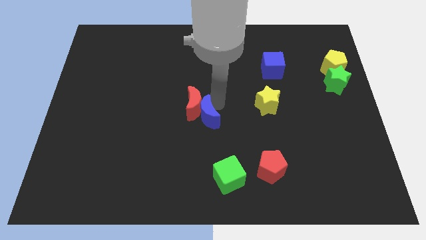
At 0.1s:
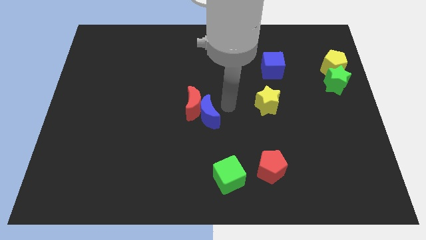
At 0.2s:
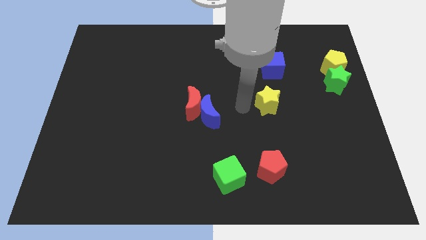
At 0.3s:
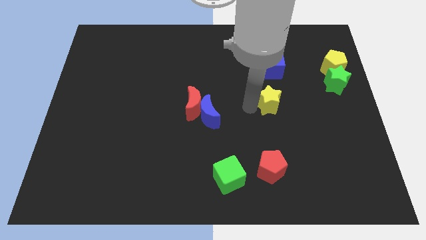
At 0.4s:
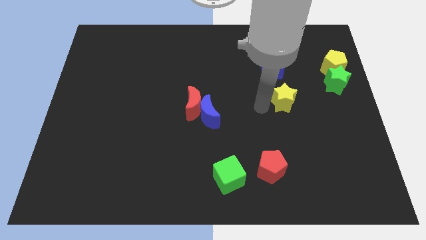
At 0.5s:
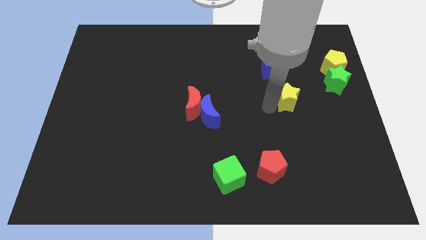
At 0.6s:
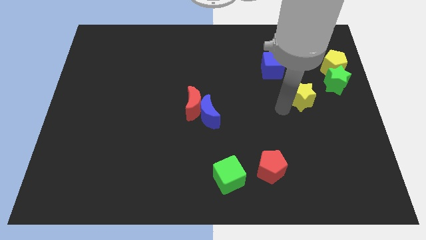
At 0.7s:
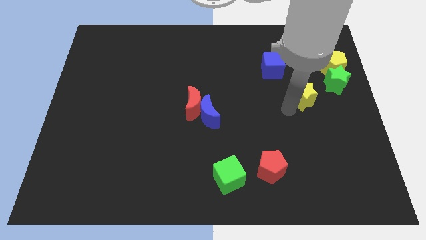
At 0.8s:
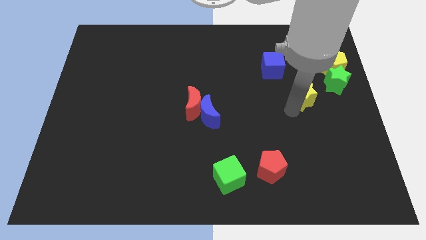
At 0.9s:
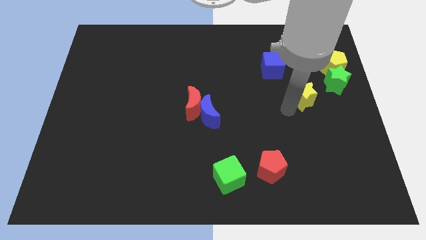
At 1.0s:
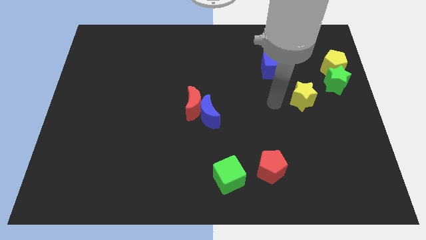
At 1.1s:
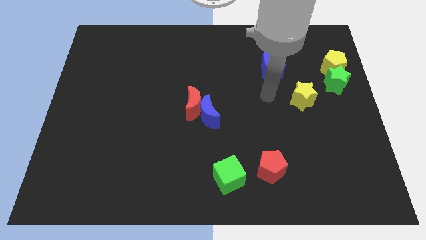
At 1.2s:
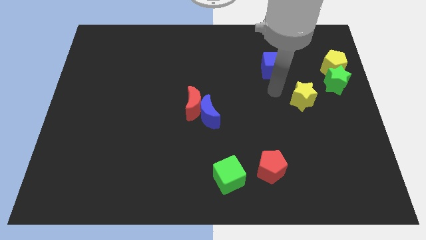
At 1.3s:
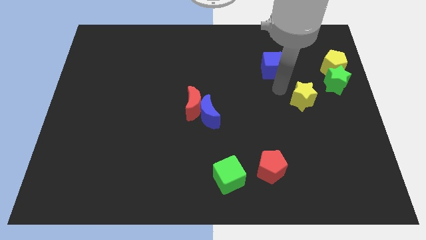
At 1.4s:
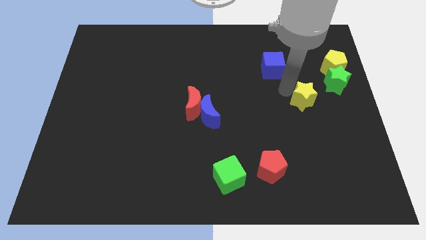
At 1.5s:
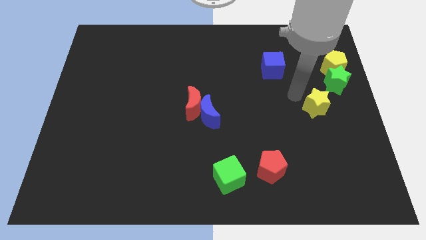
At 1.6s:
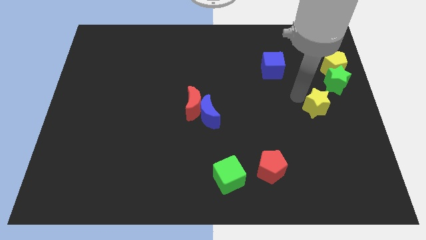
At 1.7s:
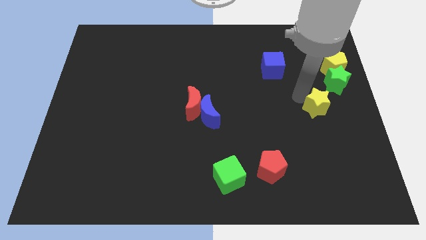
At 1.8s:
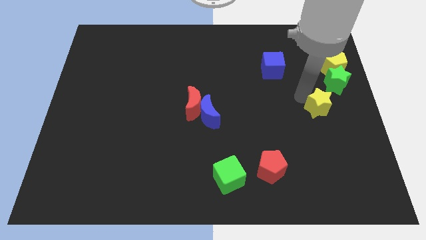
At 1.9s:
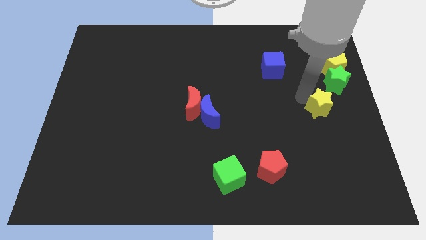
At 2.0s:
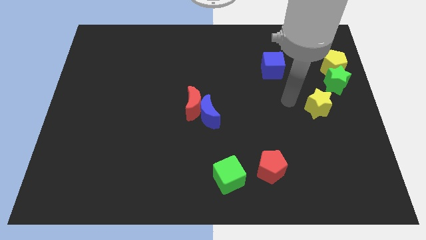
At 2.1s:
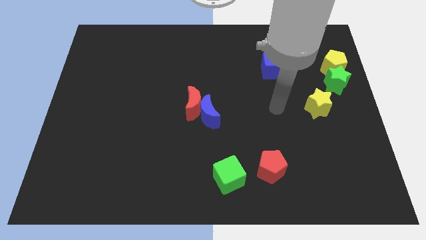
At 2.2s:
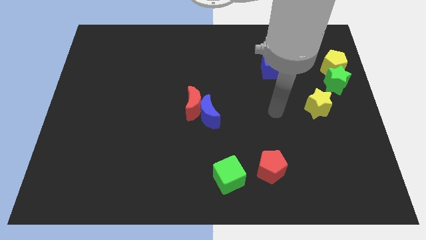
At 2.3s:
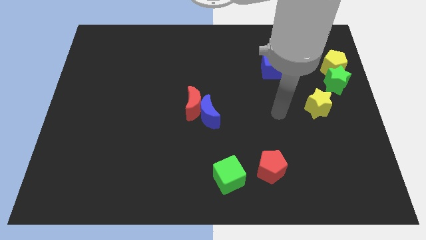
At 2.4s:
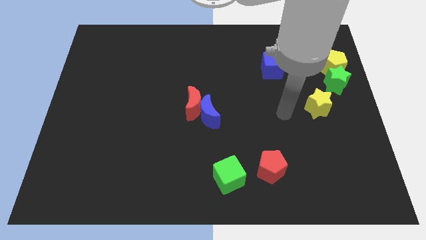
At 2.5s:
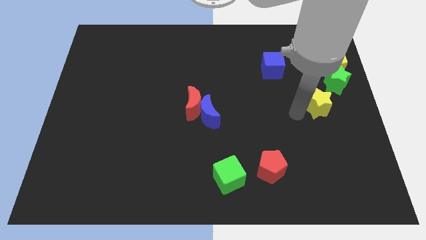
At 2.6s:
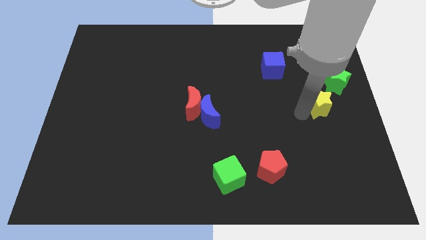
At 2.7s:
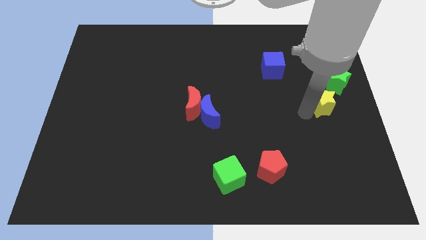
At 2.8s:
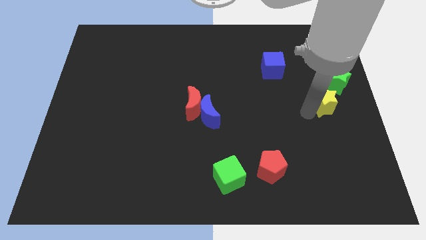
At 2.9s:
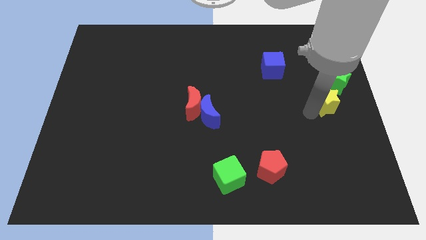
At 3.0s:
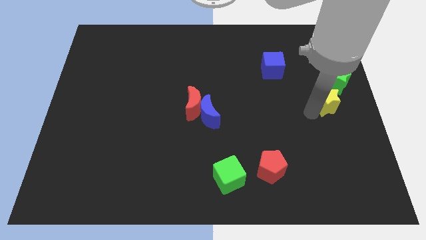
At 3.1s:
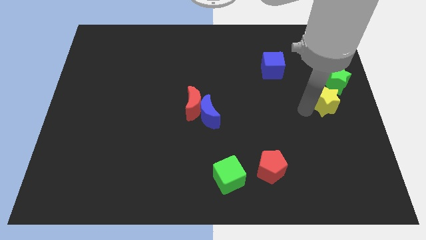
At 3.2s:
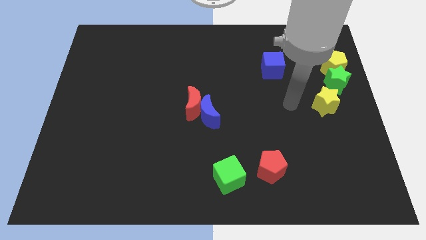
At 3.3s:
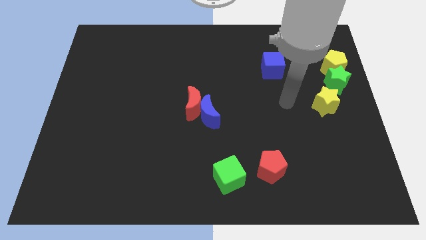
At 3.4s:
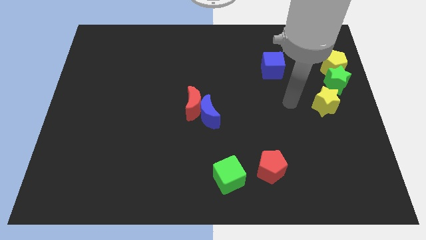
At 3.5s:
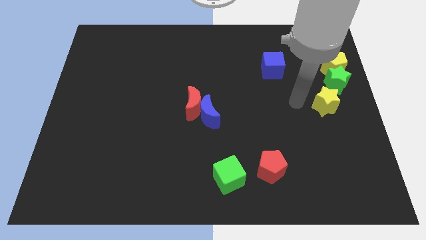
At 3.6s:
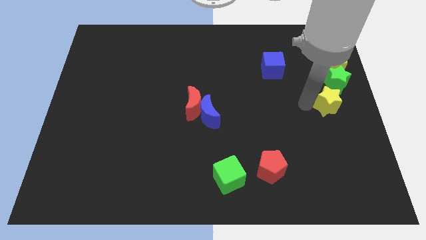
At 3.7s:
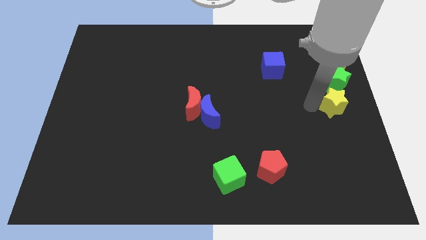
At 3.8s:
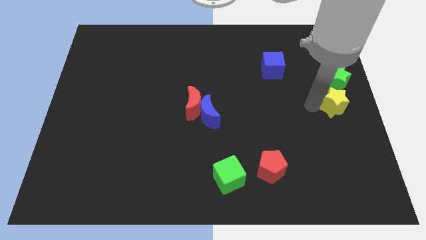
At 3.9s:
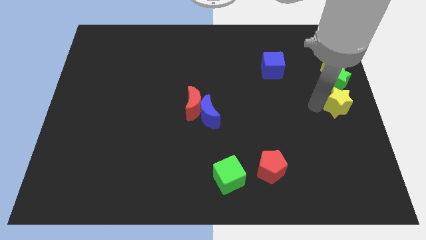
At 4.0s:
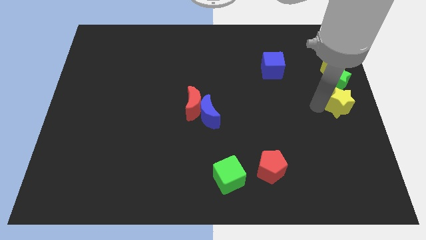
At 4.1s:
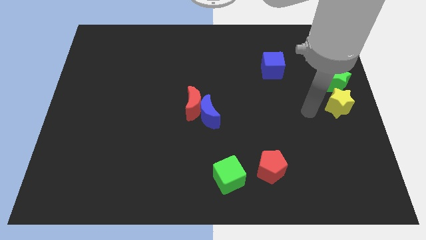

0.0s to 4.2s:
move the yellow star towards the bottom side of the green star

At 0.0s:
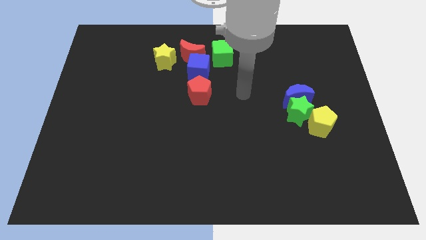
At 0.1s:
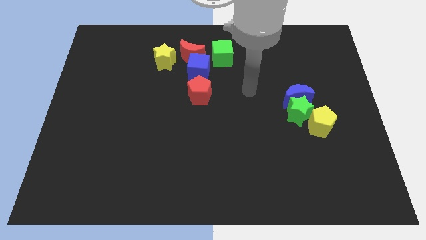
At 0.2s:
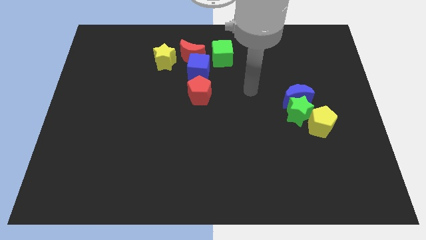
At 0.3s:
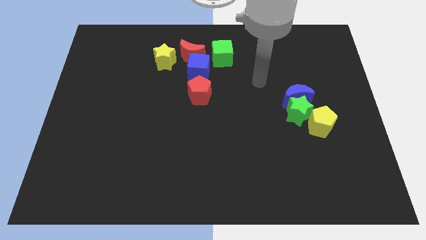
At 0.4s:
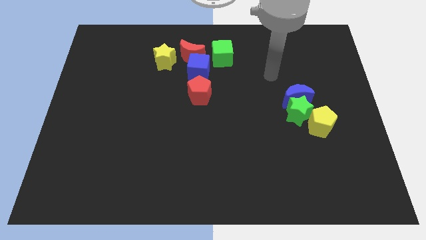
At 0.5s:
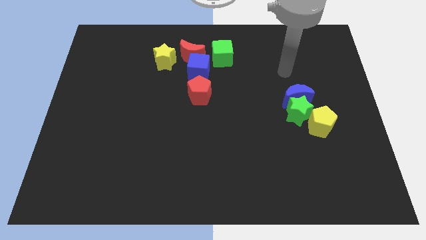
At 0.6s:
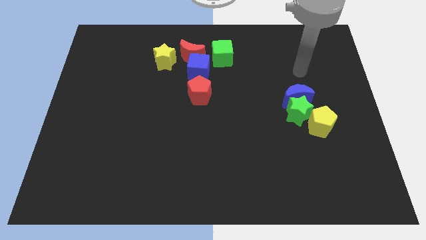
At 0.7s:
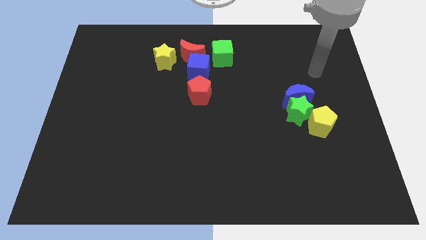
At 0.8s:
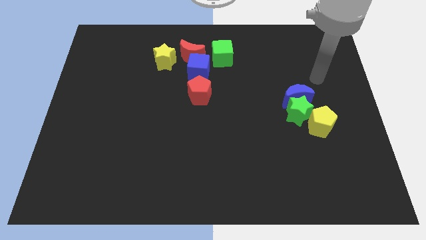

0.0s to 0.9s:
move the arm towards the blue crescent

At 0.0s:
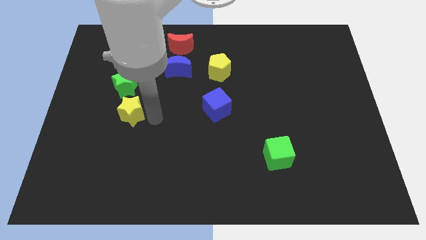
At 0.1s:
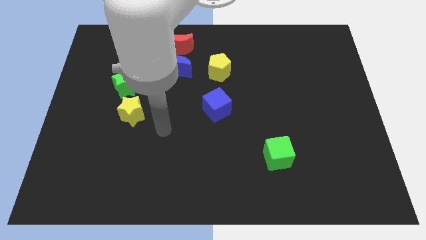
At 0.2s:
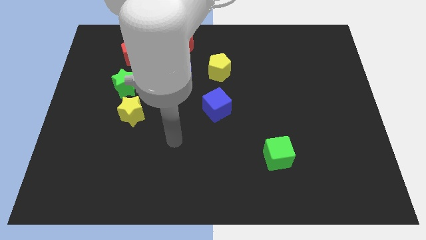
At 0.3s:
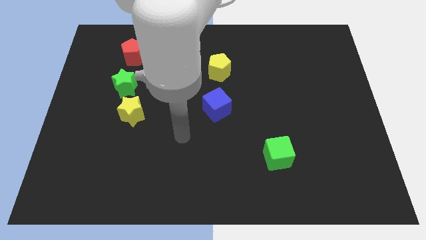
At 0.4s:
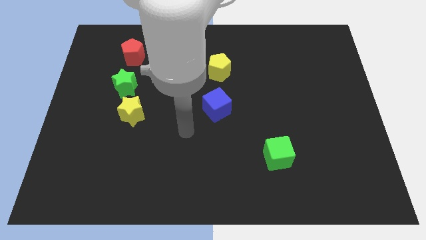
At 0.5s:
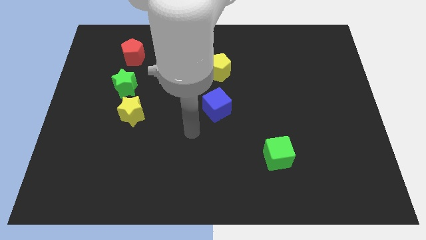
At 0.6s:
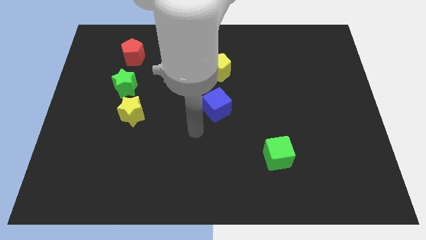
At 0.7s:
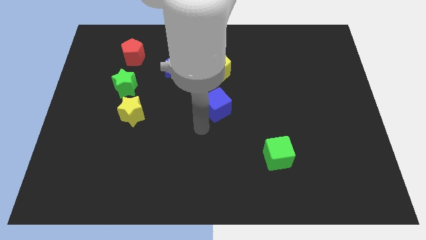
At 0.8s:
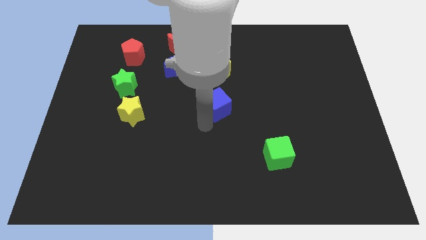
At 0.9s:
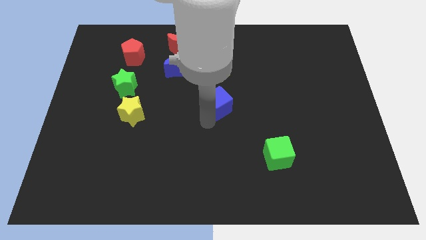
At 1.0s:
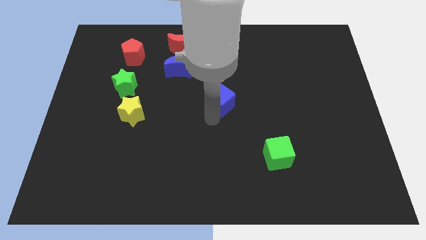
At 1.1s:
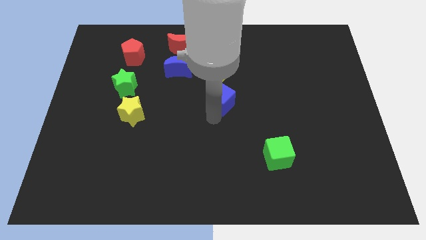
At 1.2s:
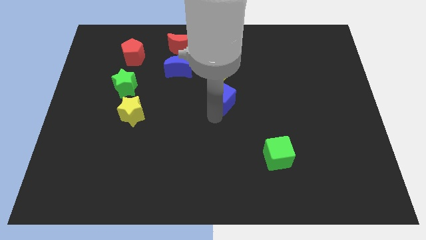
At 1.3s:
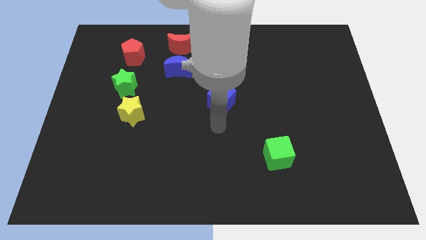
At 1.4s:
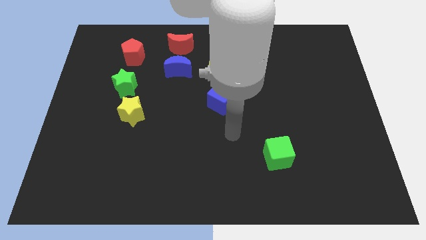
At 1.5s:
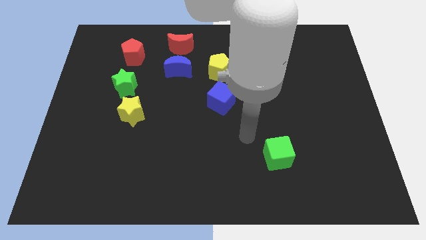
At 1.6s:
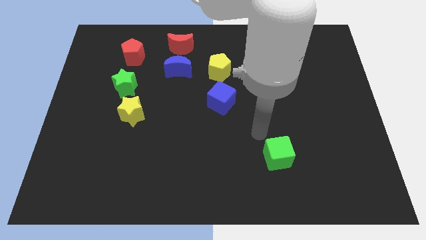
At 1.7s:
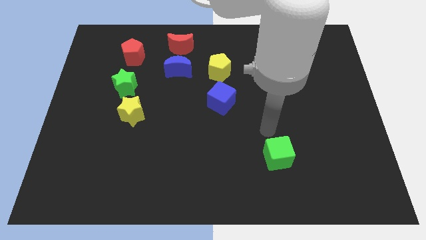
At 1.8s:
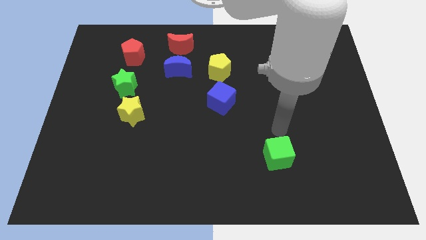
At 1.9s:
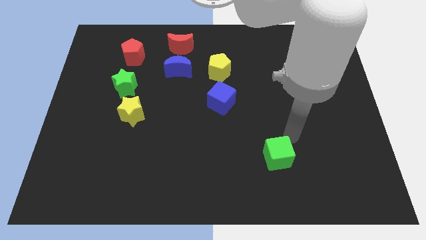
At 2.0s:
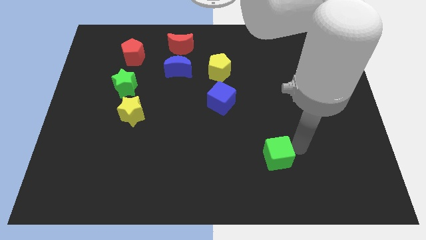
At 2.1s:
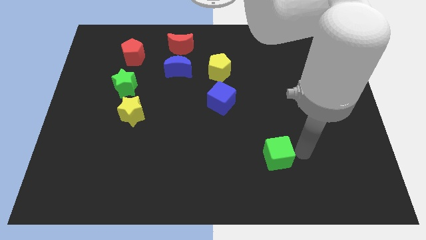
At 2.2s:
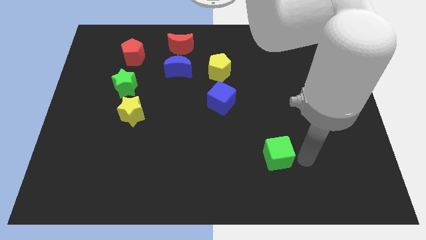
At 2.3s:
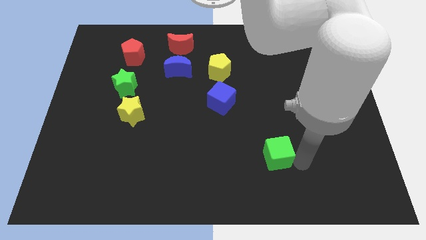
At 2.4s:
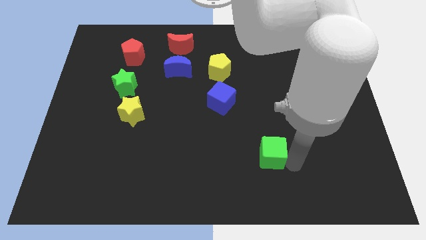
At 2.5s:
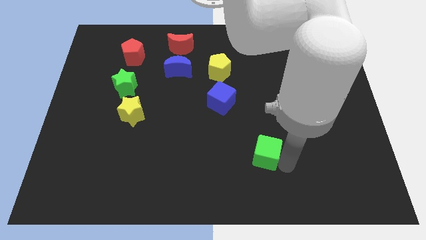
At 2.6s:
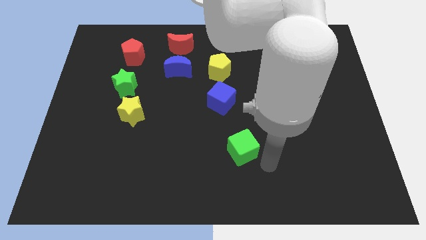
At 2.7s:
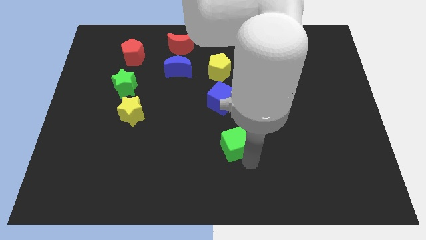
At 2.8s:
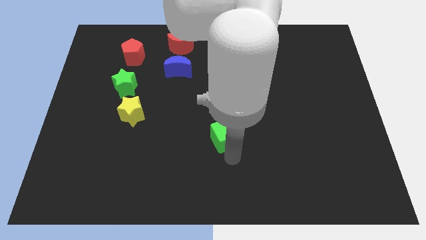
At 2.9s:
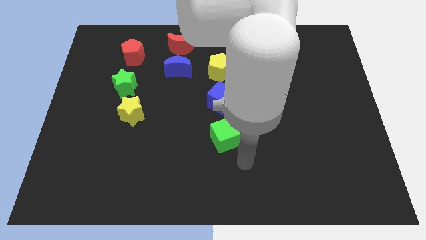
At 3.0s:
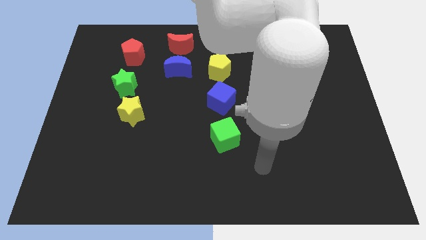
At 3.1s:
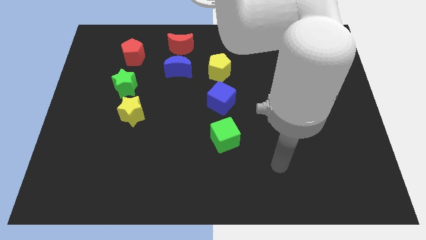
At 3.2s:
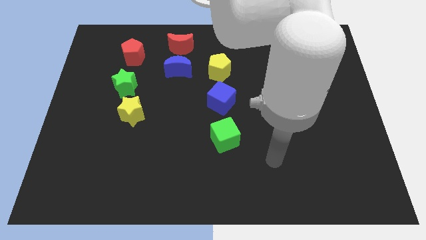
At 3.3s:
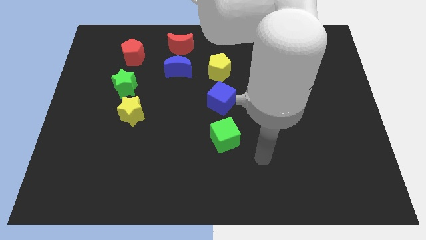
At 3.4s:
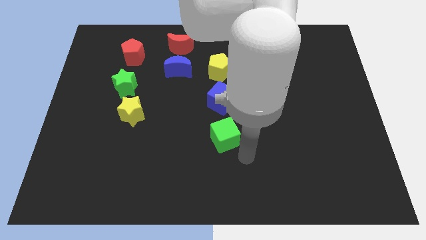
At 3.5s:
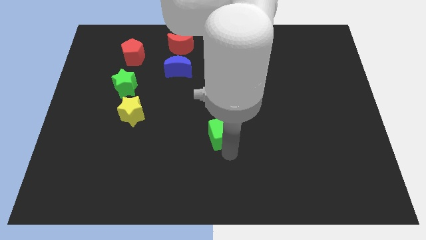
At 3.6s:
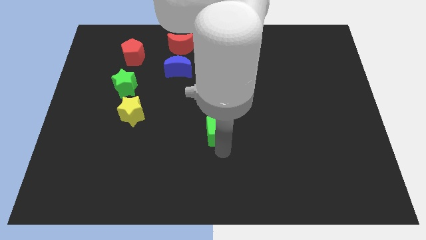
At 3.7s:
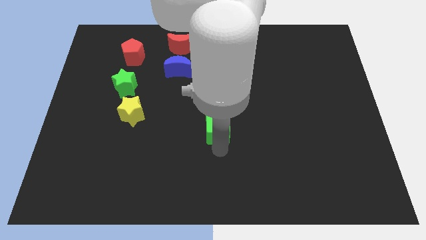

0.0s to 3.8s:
place the green cube below the blue cube
